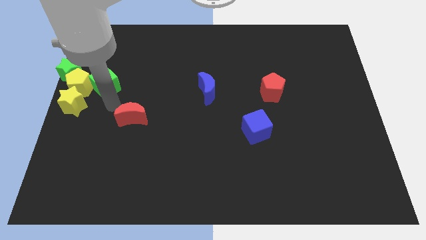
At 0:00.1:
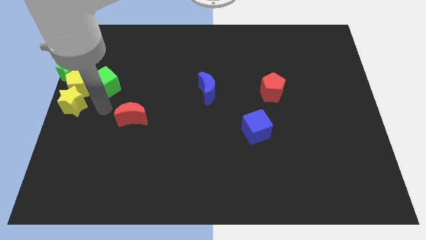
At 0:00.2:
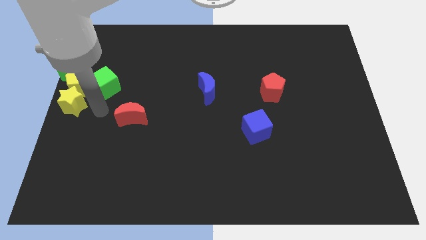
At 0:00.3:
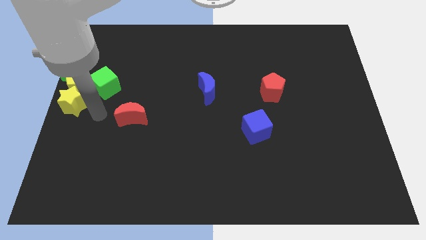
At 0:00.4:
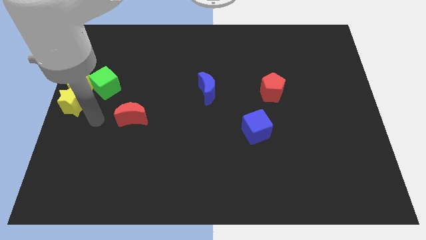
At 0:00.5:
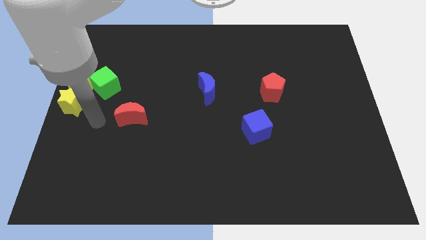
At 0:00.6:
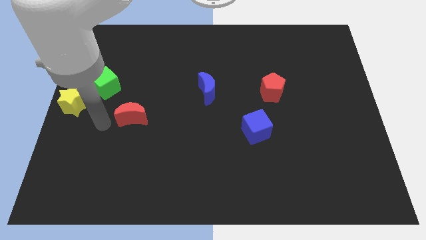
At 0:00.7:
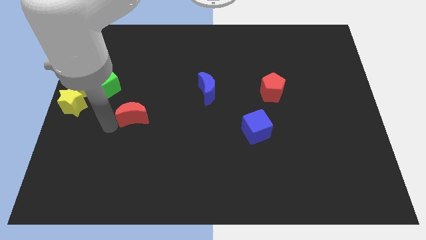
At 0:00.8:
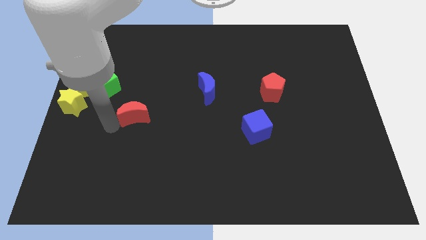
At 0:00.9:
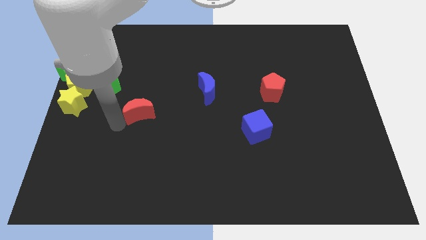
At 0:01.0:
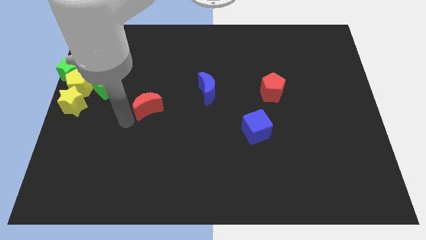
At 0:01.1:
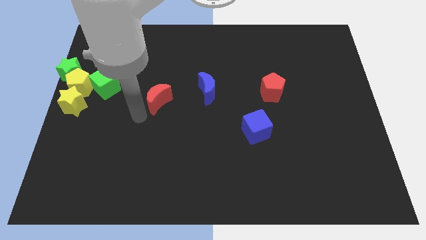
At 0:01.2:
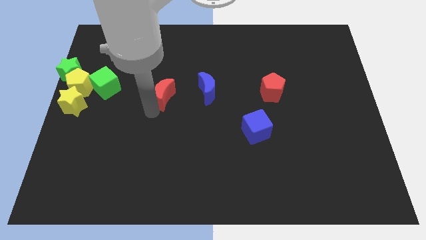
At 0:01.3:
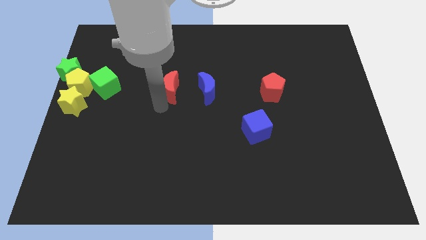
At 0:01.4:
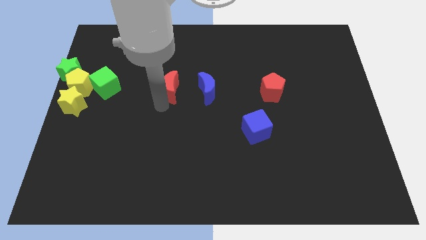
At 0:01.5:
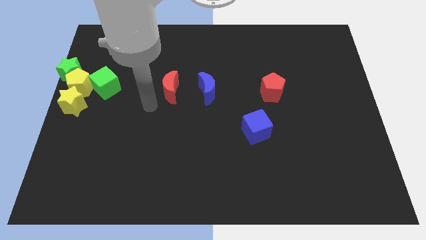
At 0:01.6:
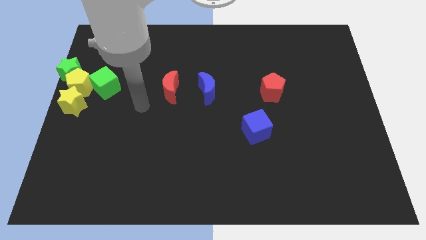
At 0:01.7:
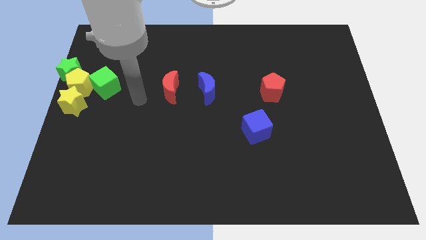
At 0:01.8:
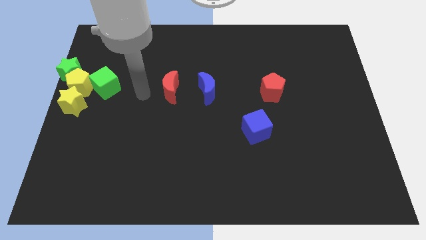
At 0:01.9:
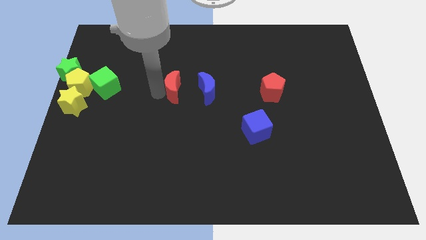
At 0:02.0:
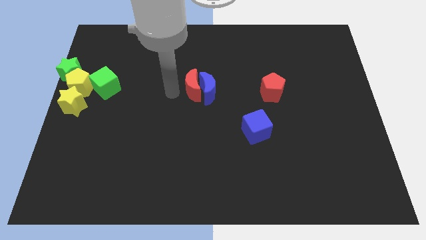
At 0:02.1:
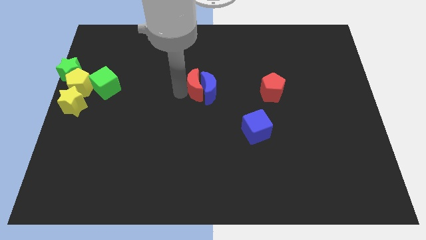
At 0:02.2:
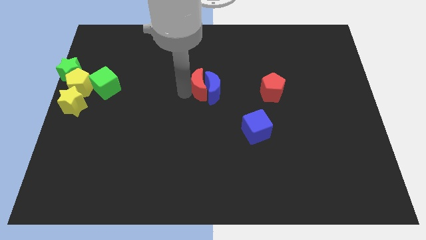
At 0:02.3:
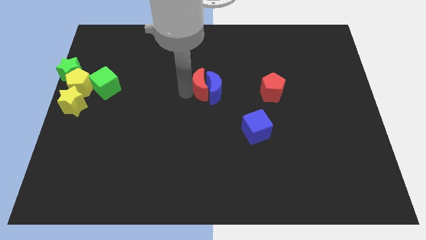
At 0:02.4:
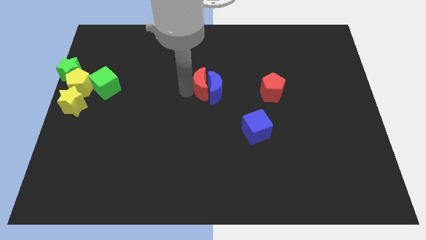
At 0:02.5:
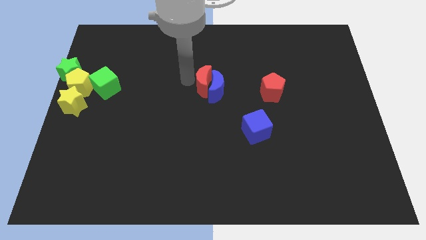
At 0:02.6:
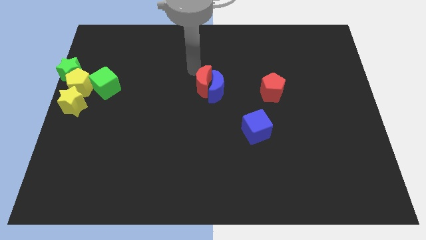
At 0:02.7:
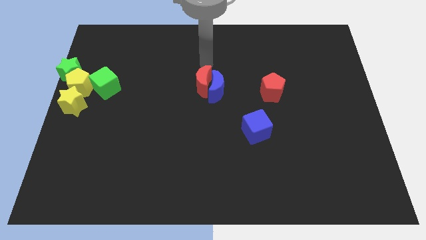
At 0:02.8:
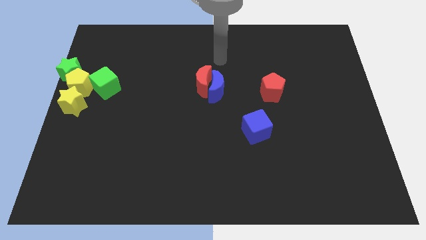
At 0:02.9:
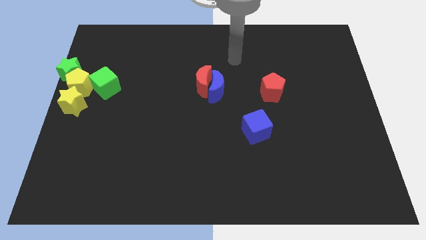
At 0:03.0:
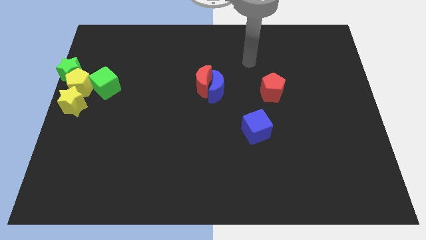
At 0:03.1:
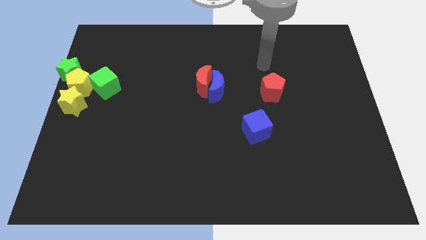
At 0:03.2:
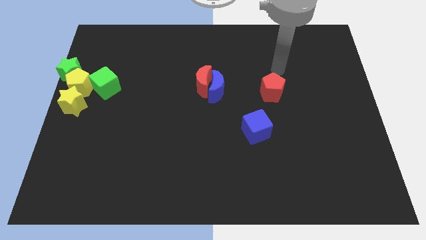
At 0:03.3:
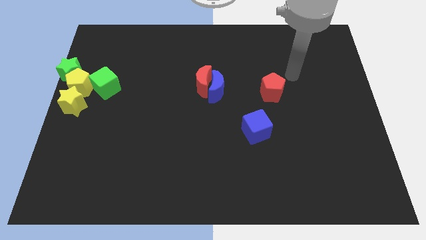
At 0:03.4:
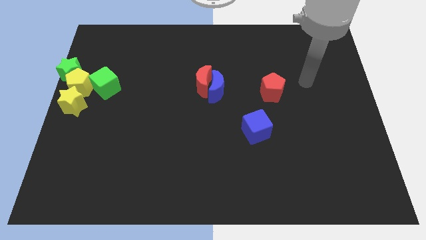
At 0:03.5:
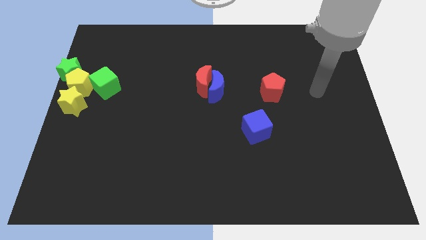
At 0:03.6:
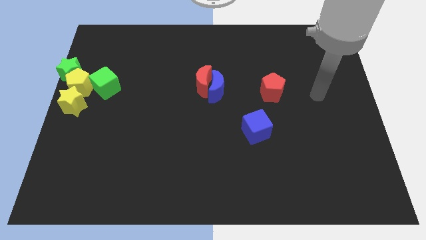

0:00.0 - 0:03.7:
move red moon left beside the blue moon

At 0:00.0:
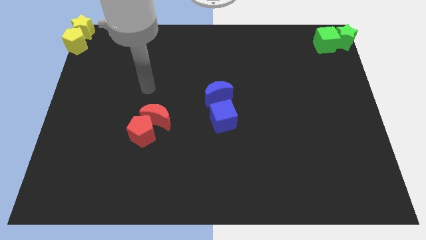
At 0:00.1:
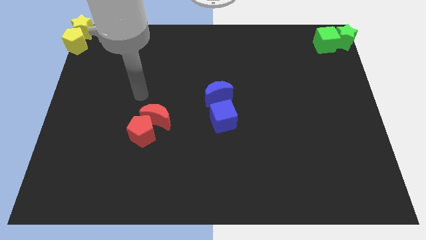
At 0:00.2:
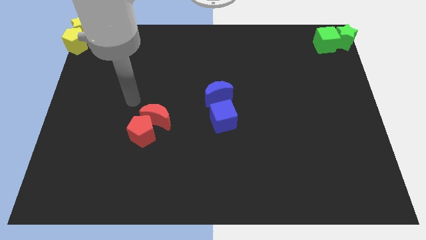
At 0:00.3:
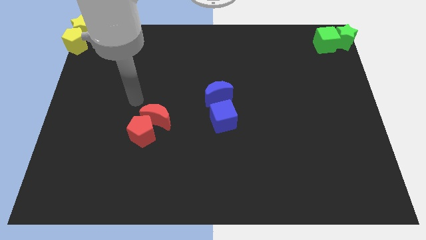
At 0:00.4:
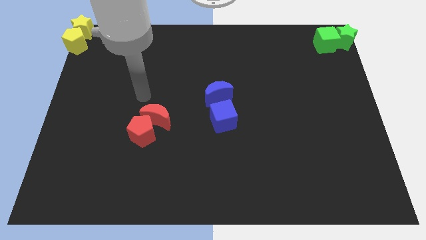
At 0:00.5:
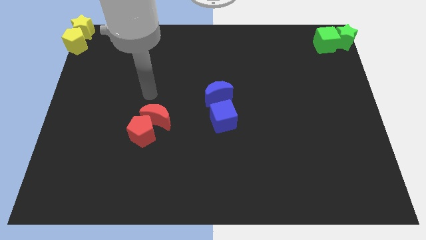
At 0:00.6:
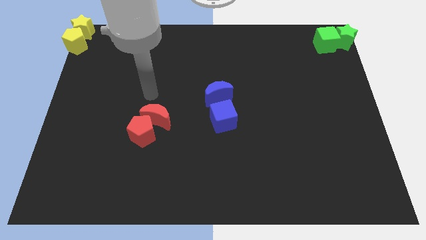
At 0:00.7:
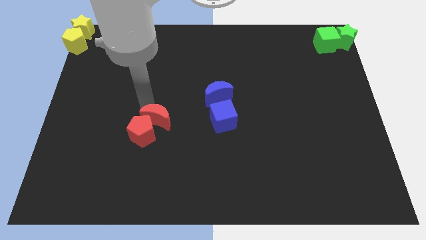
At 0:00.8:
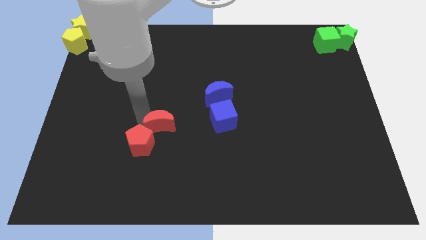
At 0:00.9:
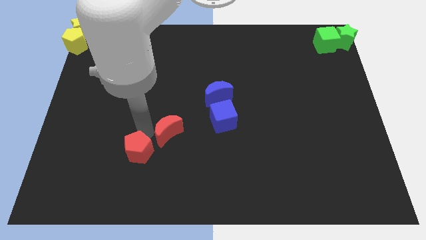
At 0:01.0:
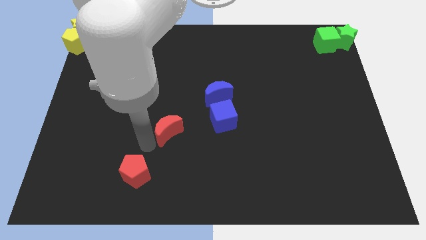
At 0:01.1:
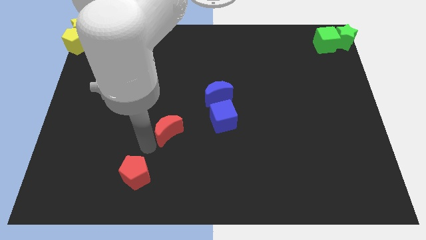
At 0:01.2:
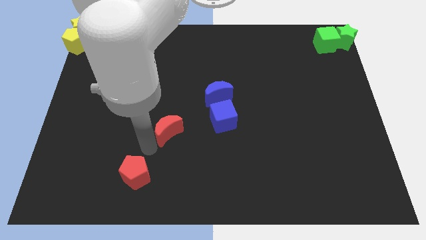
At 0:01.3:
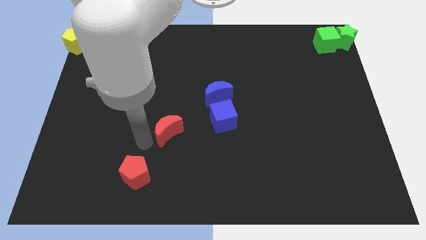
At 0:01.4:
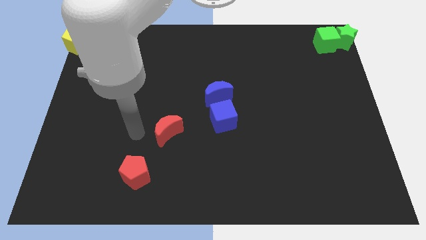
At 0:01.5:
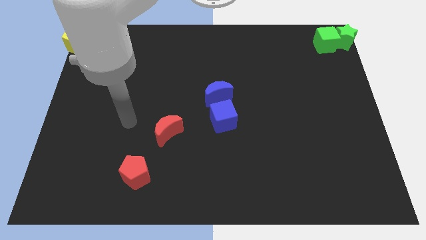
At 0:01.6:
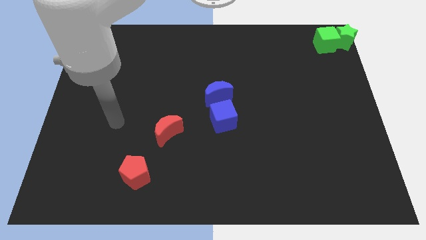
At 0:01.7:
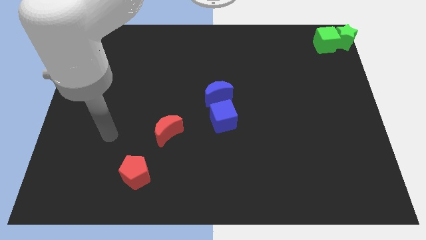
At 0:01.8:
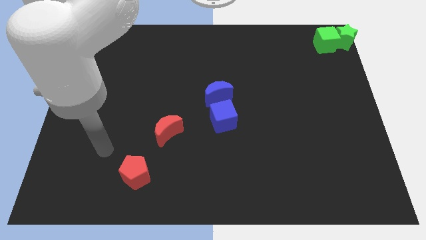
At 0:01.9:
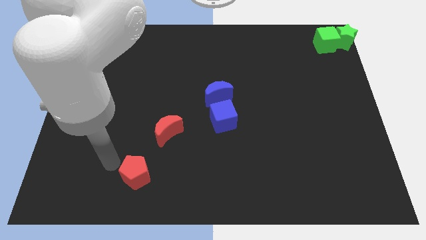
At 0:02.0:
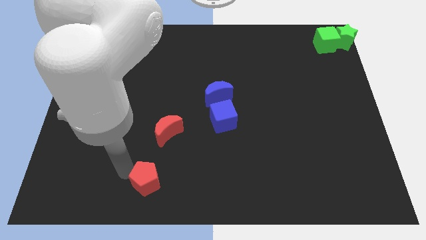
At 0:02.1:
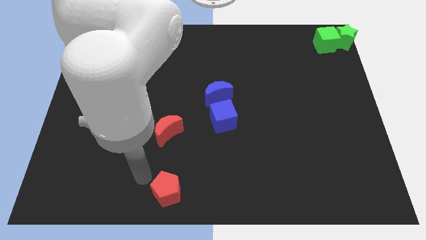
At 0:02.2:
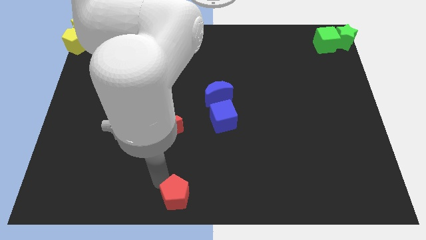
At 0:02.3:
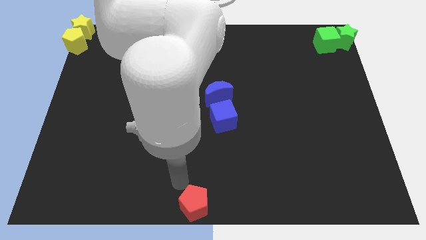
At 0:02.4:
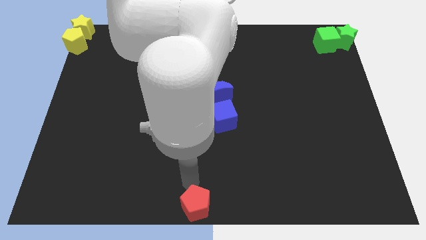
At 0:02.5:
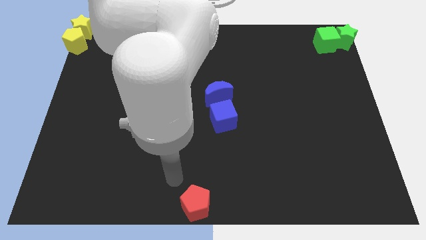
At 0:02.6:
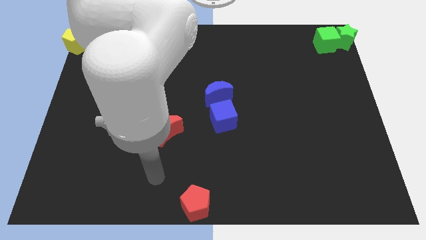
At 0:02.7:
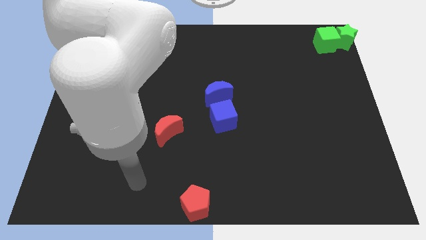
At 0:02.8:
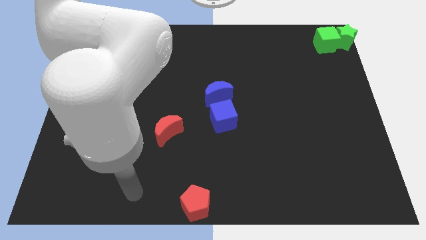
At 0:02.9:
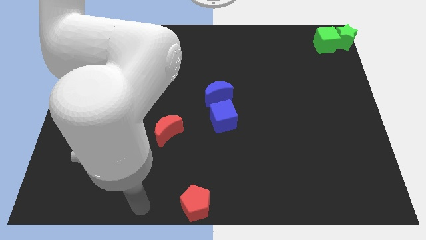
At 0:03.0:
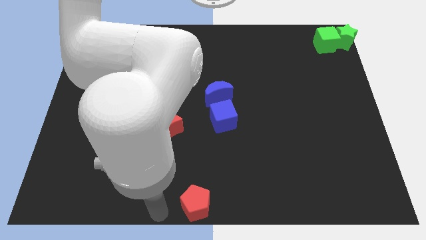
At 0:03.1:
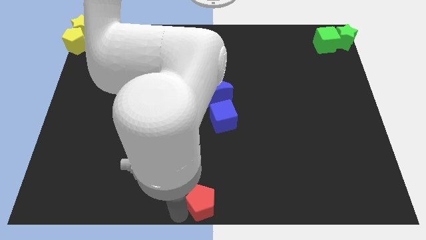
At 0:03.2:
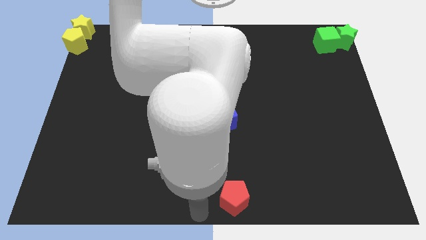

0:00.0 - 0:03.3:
place the red pentagon at bottom center of the board

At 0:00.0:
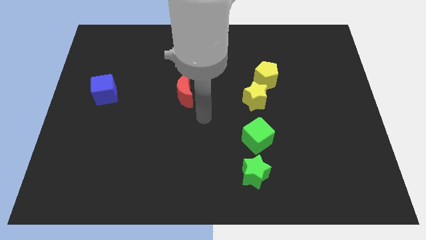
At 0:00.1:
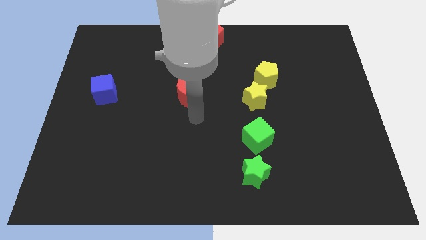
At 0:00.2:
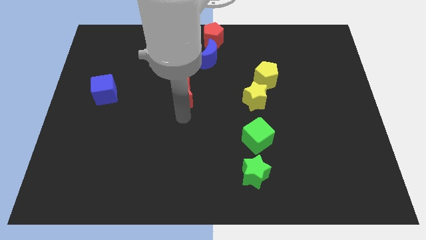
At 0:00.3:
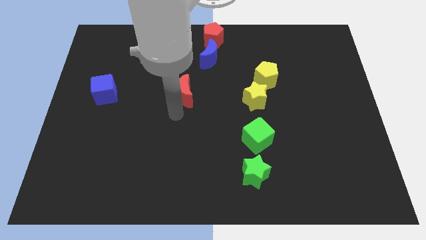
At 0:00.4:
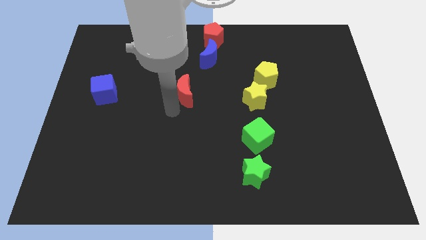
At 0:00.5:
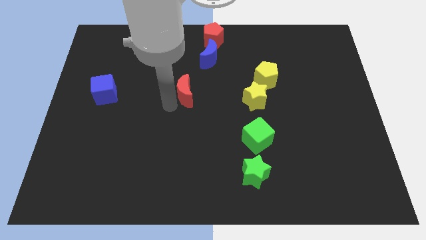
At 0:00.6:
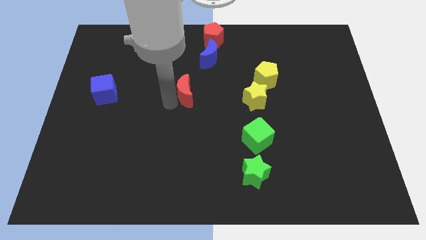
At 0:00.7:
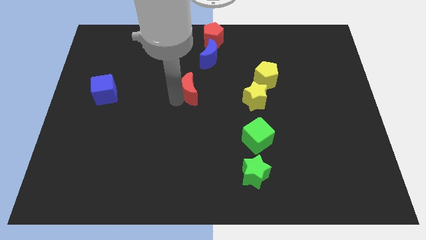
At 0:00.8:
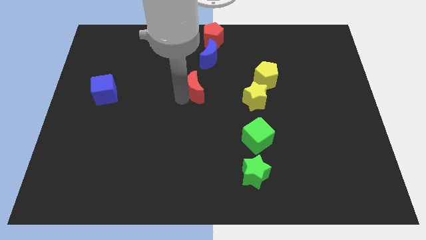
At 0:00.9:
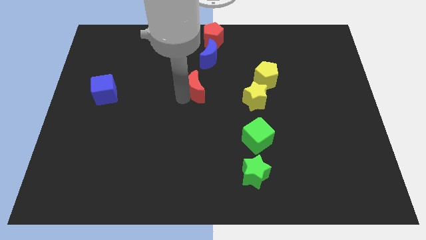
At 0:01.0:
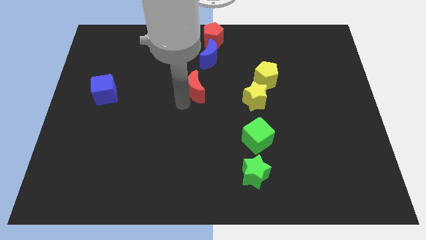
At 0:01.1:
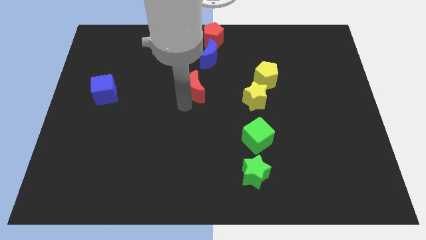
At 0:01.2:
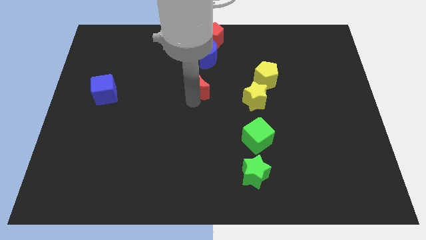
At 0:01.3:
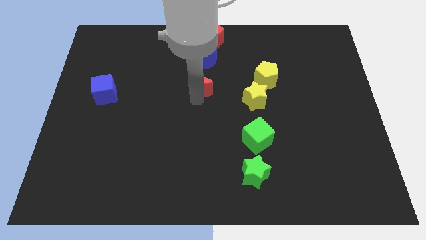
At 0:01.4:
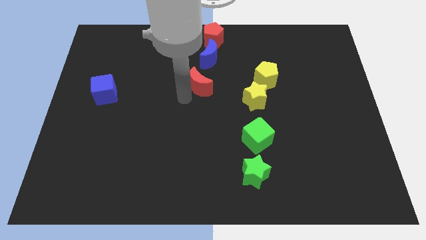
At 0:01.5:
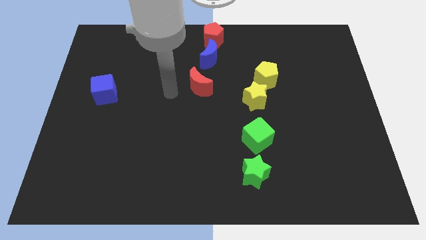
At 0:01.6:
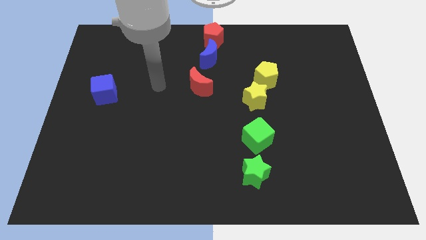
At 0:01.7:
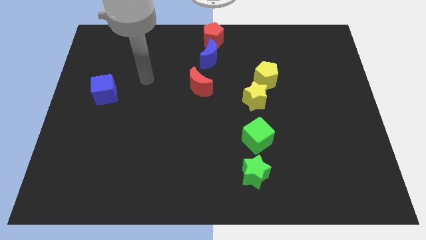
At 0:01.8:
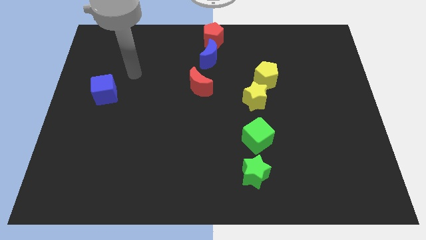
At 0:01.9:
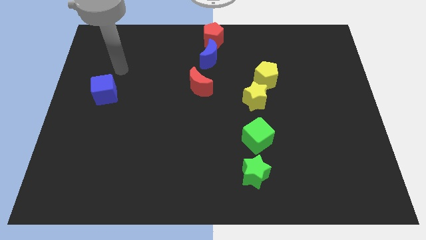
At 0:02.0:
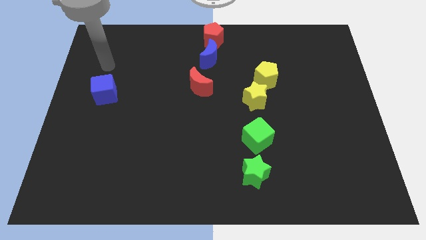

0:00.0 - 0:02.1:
push the red crescent to the center of the board
